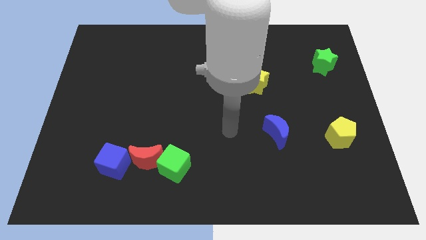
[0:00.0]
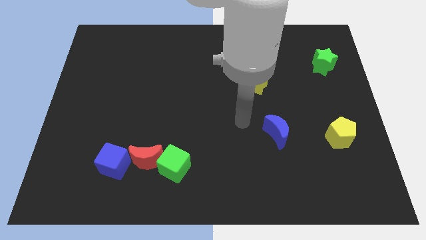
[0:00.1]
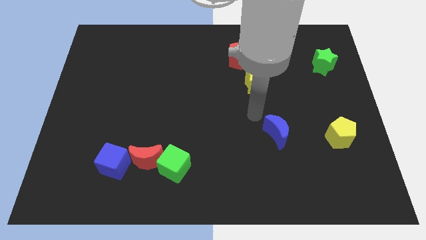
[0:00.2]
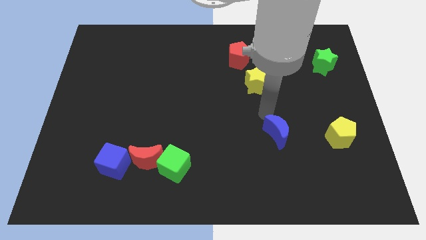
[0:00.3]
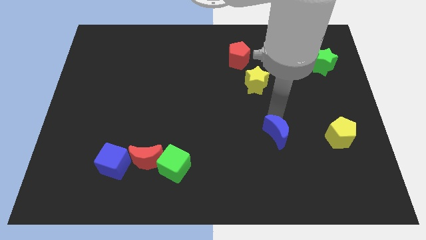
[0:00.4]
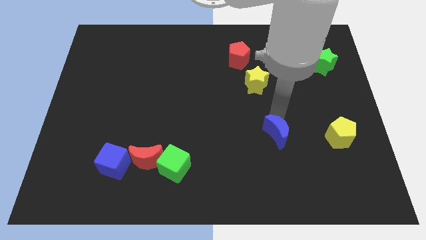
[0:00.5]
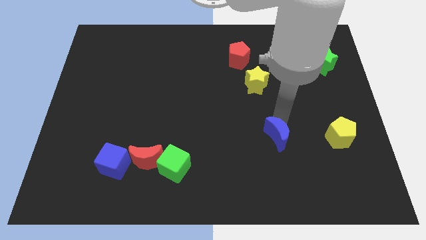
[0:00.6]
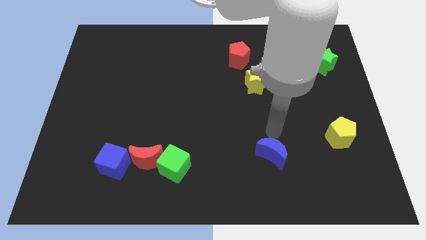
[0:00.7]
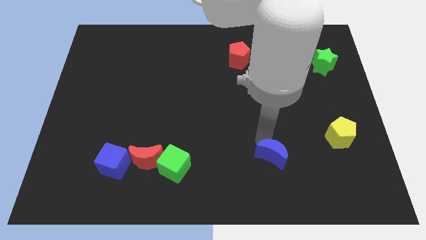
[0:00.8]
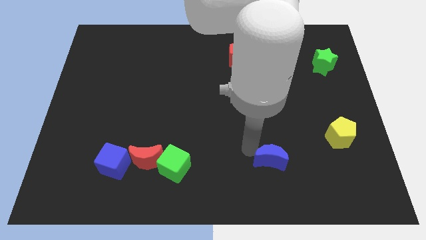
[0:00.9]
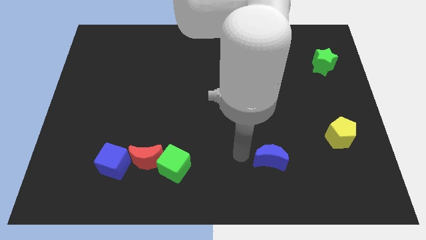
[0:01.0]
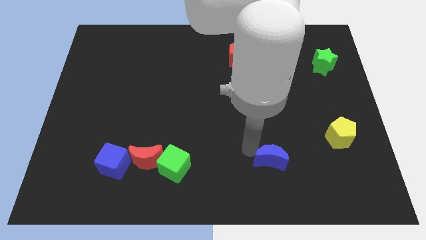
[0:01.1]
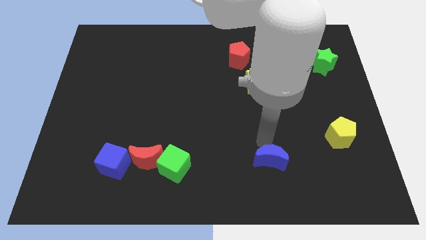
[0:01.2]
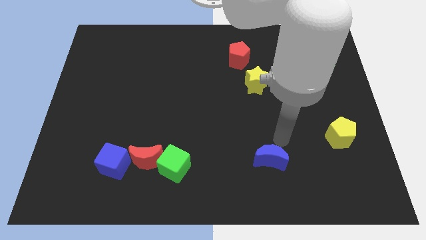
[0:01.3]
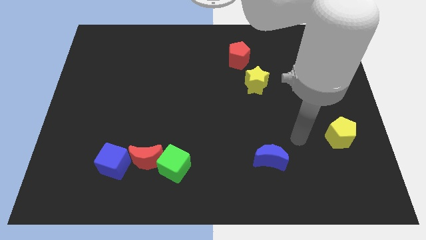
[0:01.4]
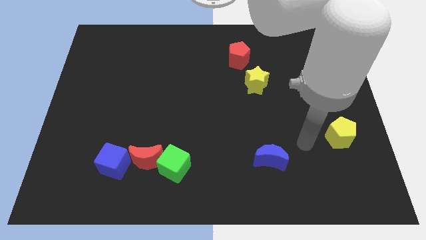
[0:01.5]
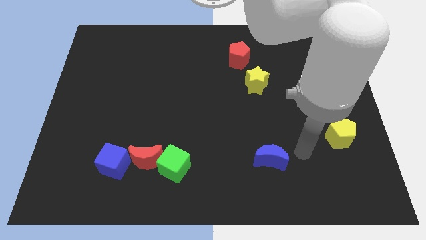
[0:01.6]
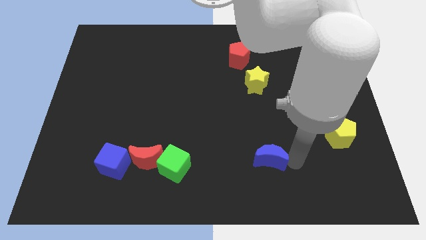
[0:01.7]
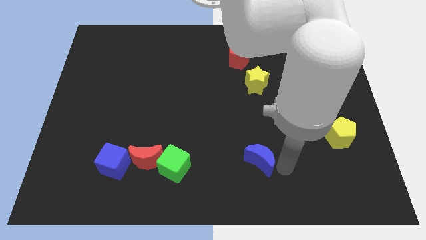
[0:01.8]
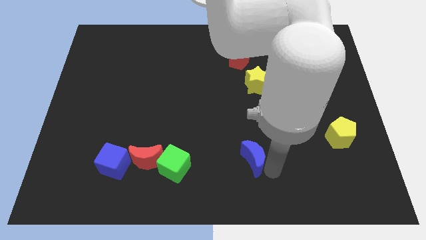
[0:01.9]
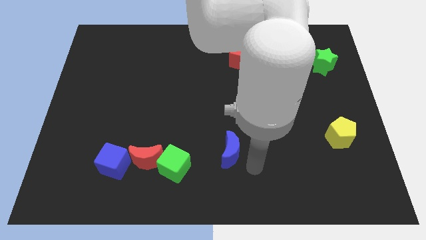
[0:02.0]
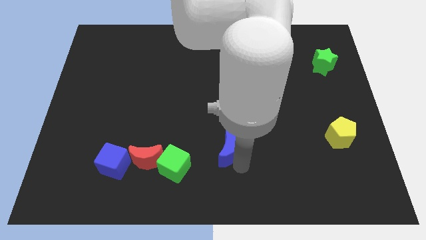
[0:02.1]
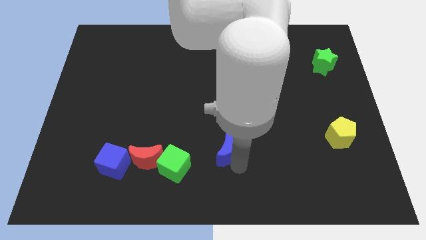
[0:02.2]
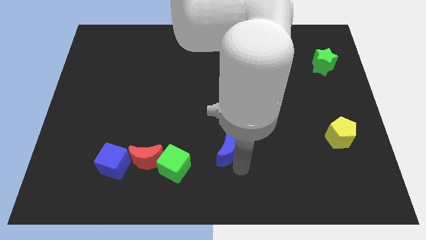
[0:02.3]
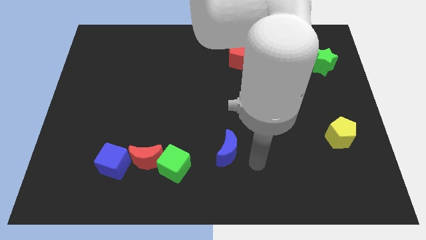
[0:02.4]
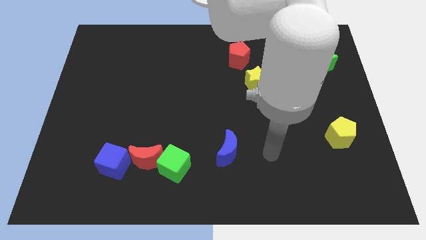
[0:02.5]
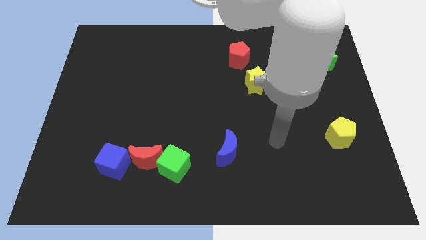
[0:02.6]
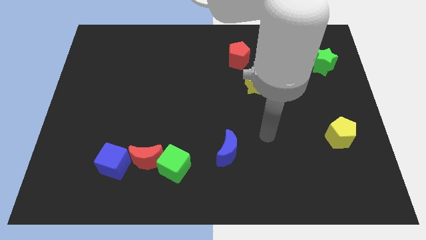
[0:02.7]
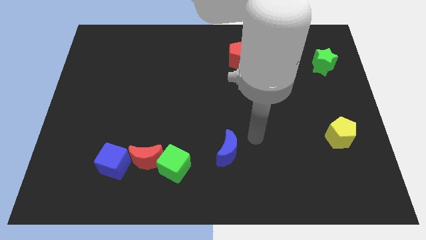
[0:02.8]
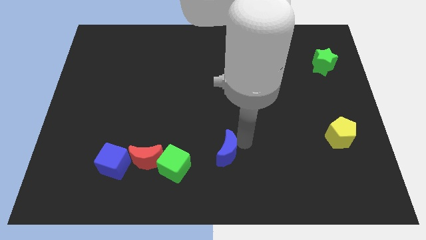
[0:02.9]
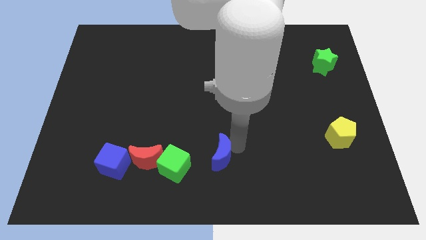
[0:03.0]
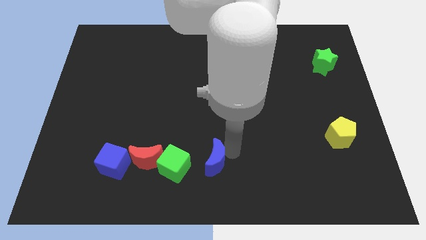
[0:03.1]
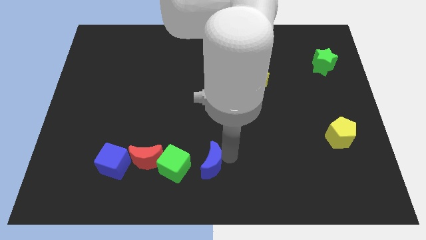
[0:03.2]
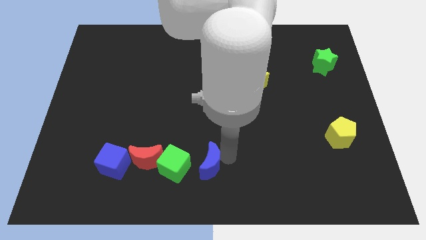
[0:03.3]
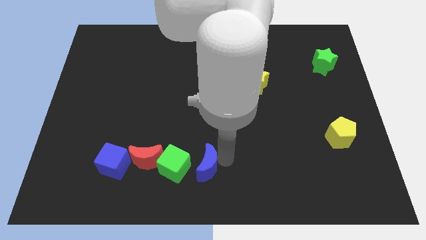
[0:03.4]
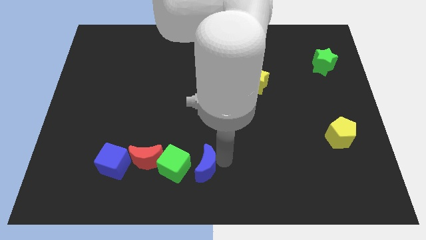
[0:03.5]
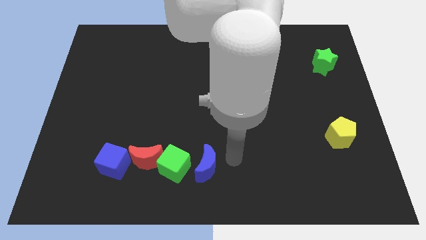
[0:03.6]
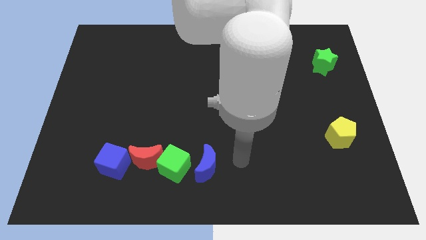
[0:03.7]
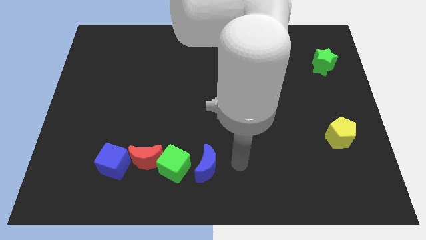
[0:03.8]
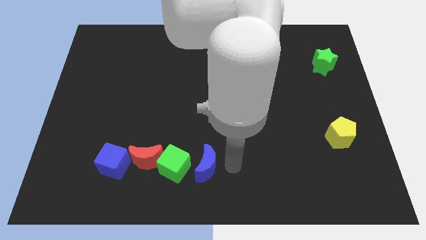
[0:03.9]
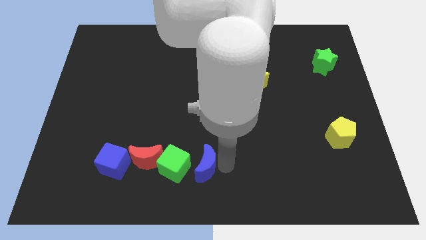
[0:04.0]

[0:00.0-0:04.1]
move the blue crescent to the right side of the green cube

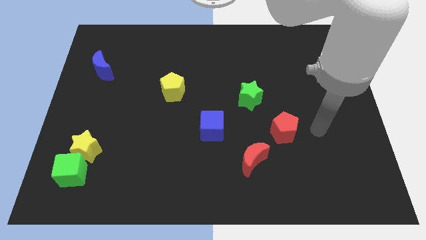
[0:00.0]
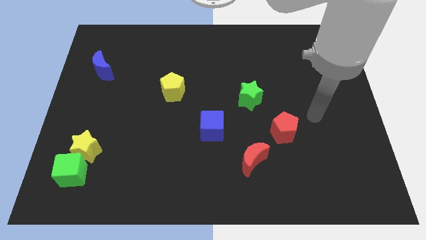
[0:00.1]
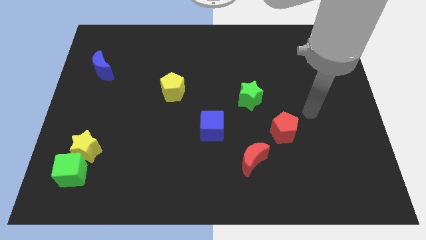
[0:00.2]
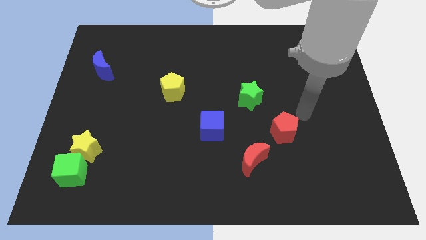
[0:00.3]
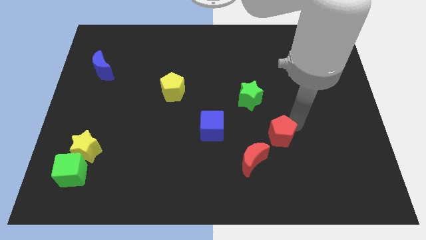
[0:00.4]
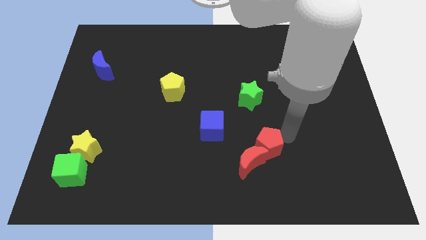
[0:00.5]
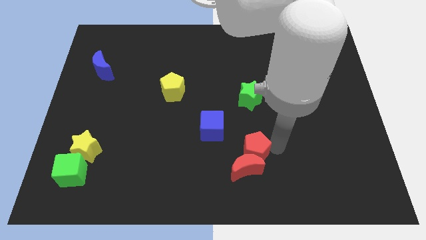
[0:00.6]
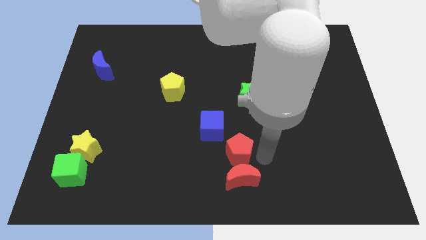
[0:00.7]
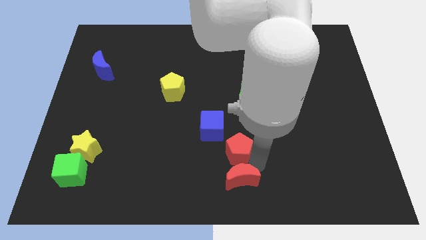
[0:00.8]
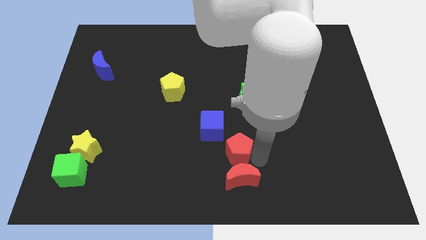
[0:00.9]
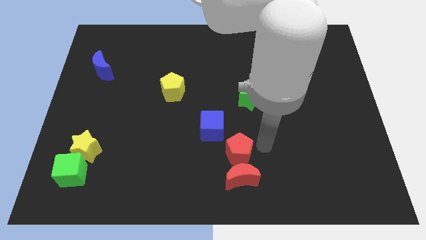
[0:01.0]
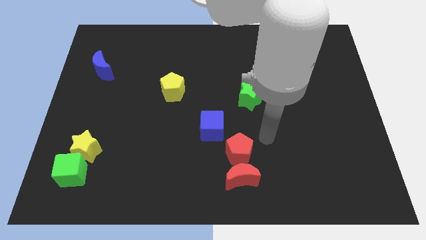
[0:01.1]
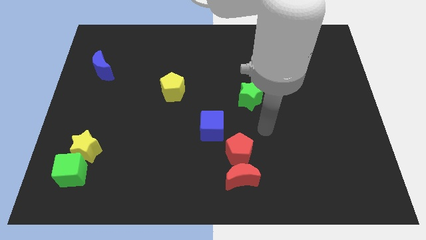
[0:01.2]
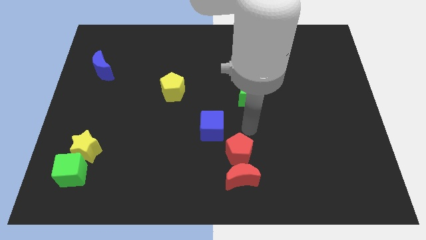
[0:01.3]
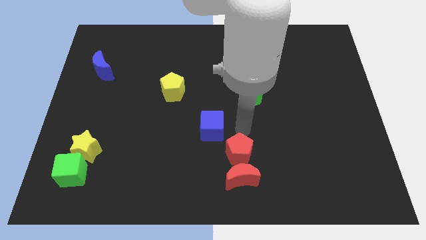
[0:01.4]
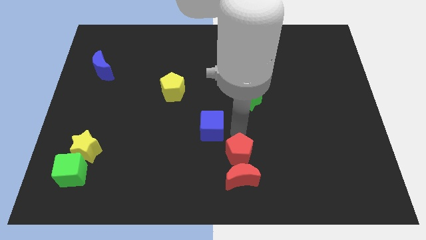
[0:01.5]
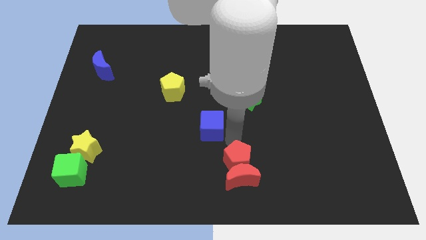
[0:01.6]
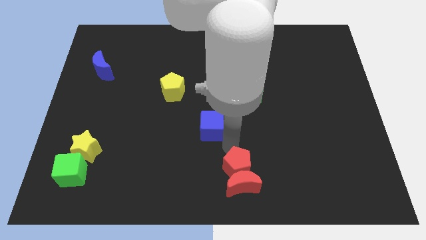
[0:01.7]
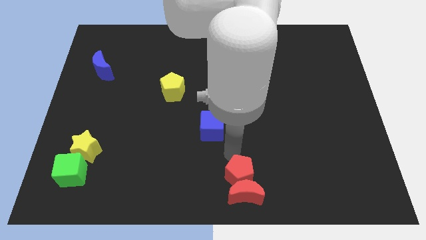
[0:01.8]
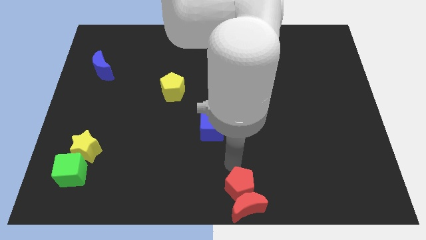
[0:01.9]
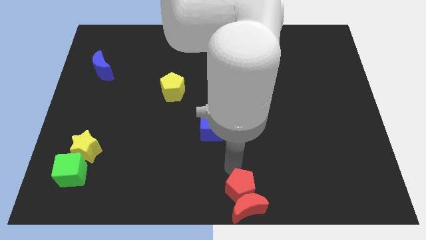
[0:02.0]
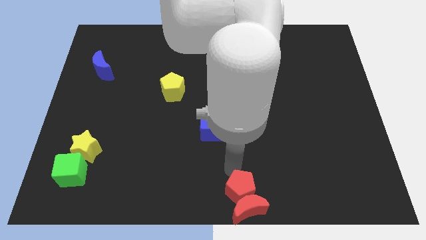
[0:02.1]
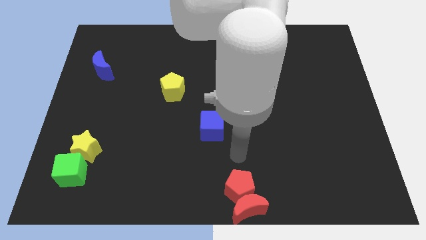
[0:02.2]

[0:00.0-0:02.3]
move the red blocks to the bottom center of the board

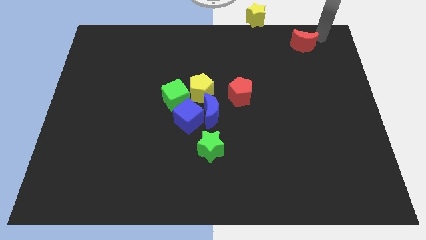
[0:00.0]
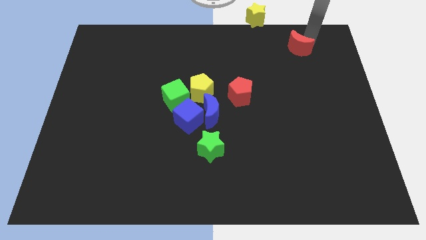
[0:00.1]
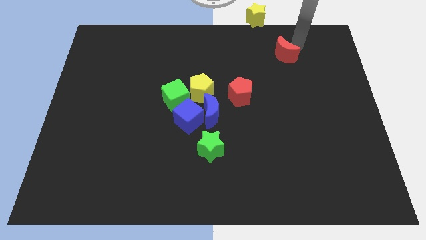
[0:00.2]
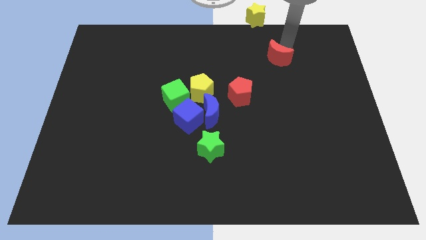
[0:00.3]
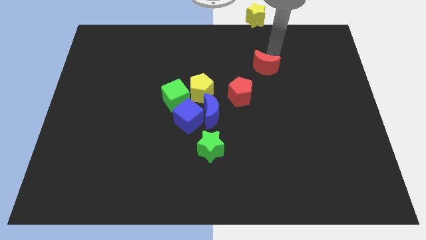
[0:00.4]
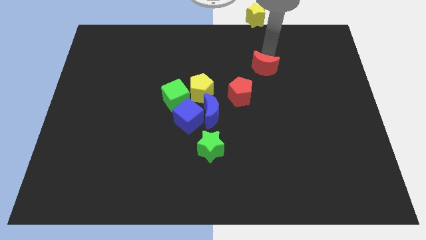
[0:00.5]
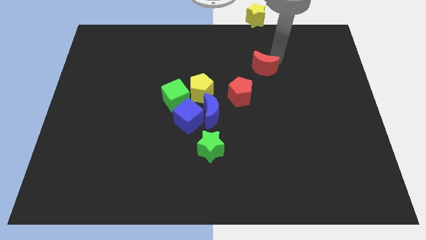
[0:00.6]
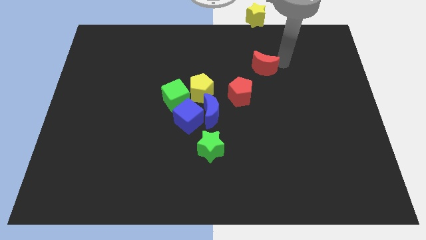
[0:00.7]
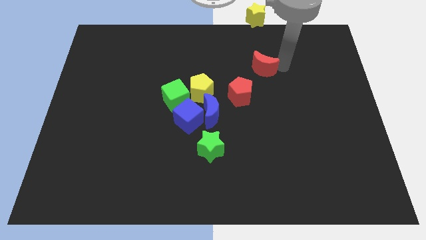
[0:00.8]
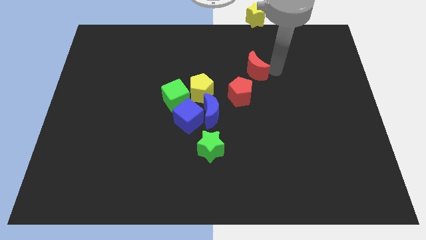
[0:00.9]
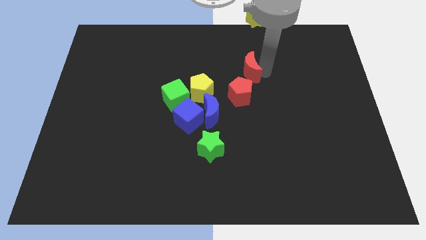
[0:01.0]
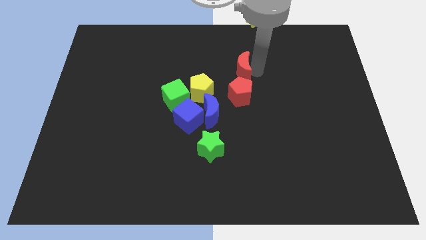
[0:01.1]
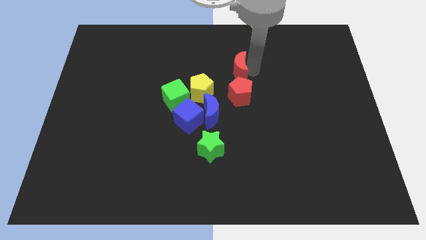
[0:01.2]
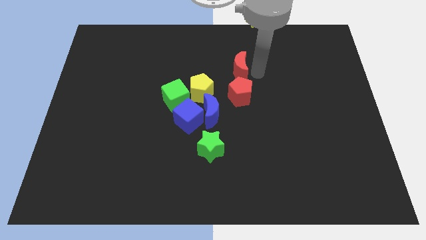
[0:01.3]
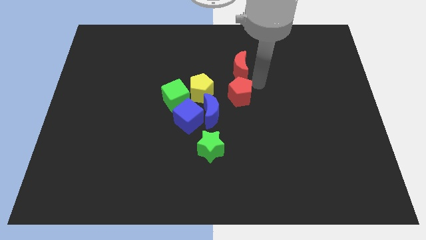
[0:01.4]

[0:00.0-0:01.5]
move the red moon above the red pentagon

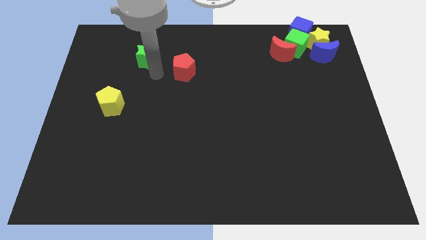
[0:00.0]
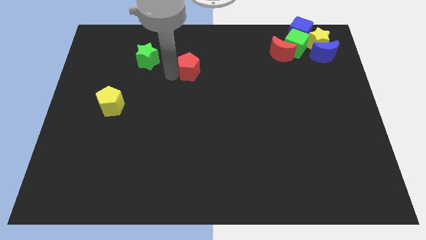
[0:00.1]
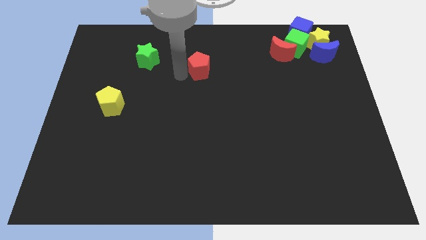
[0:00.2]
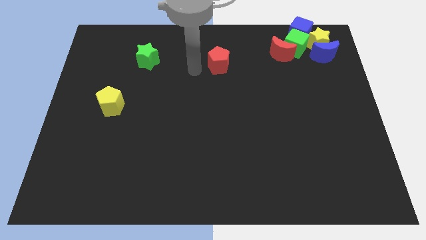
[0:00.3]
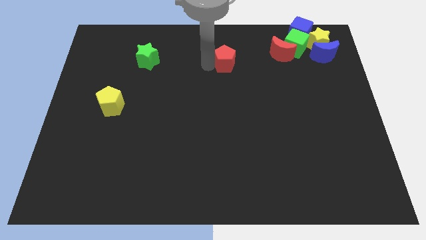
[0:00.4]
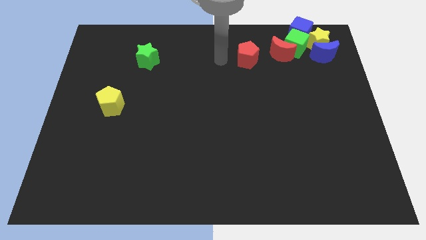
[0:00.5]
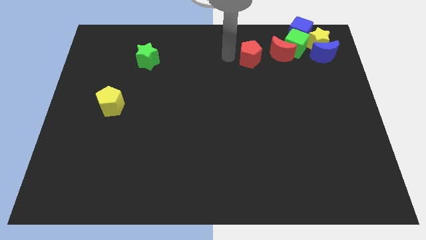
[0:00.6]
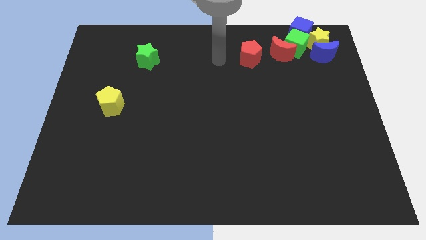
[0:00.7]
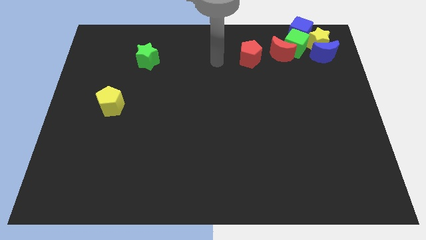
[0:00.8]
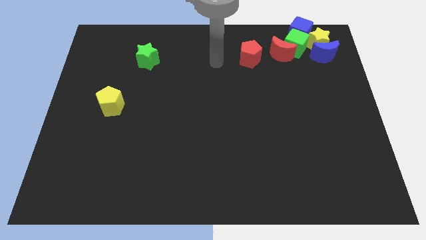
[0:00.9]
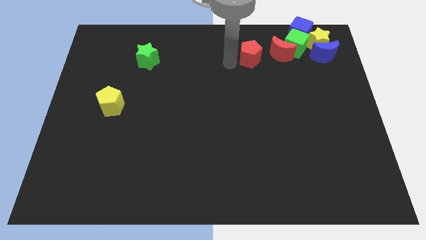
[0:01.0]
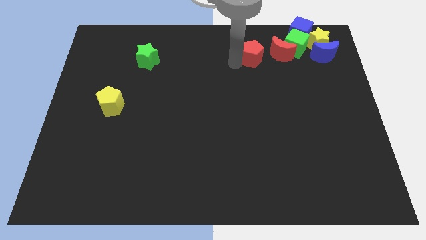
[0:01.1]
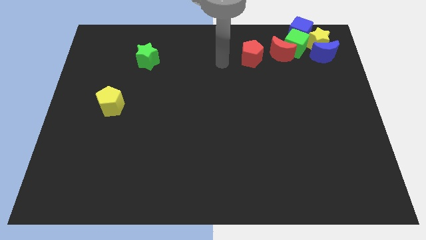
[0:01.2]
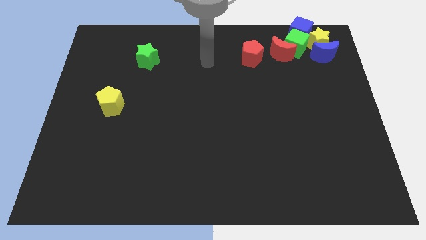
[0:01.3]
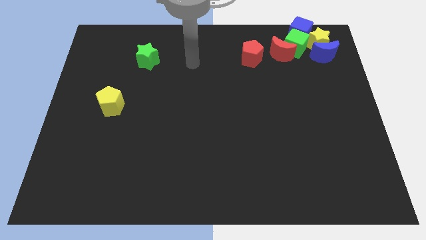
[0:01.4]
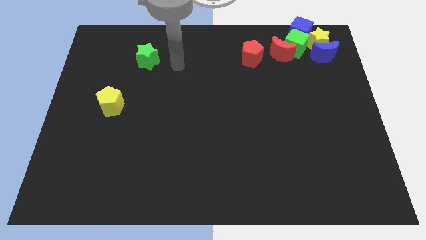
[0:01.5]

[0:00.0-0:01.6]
slide the red pentagon towards the group of blocks
